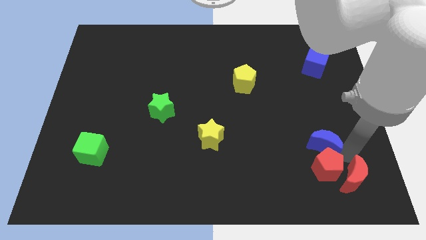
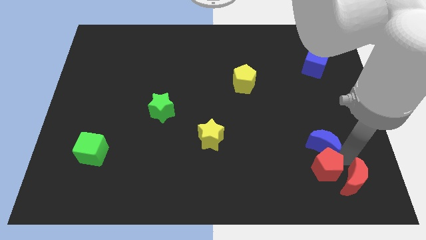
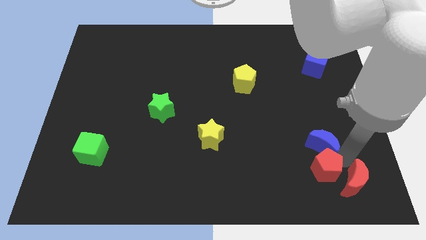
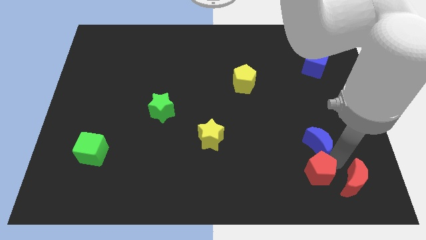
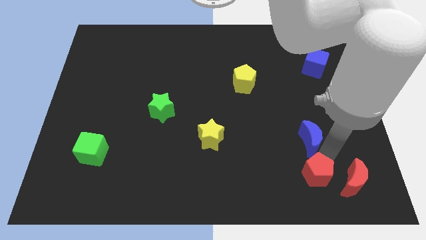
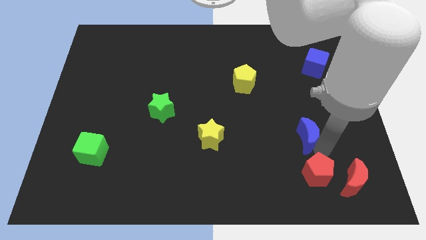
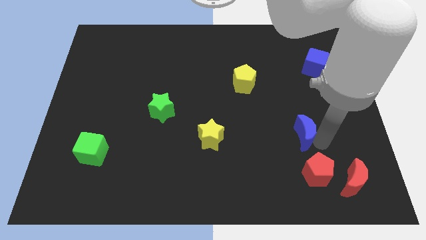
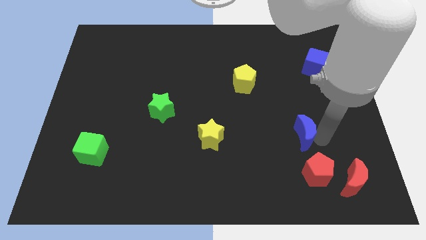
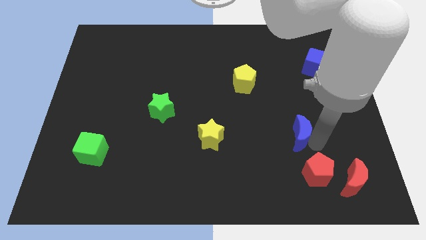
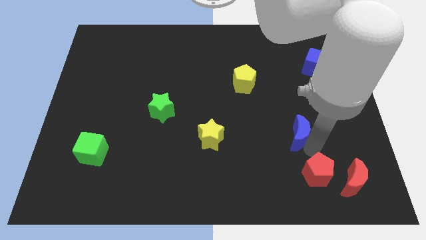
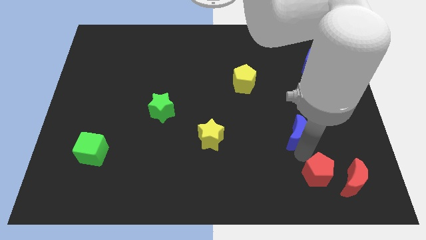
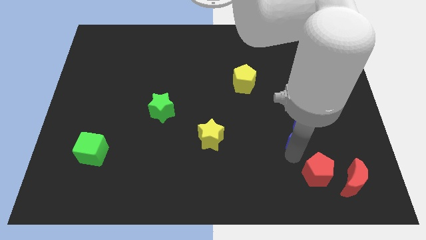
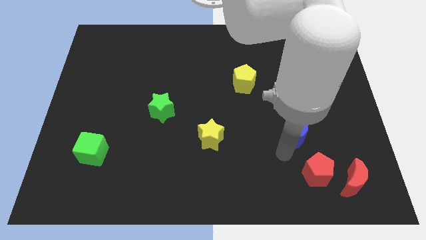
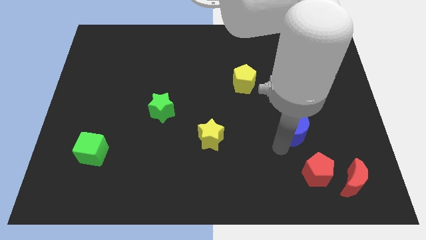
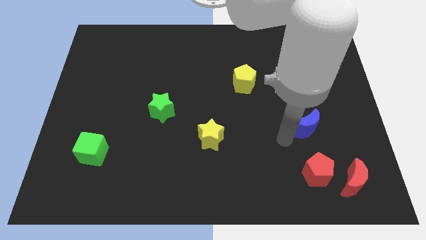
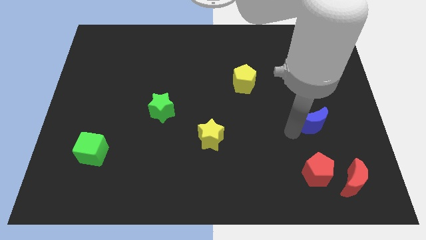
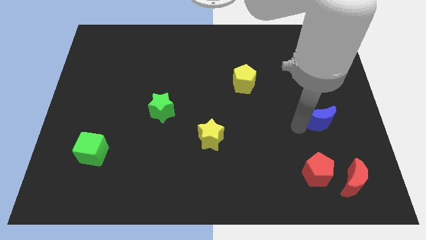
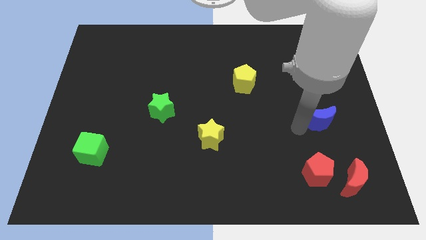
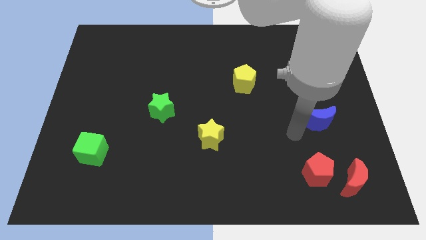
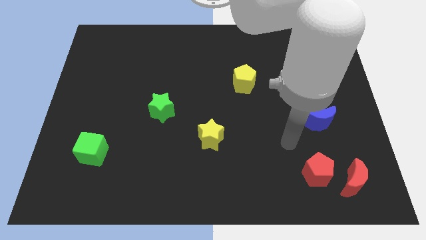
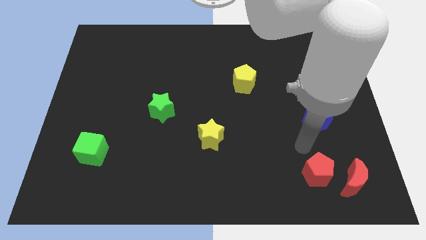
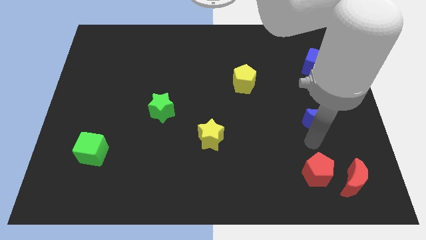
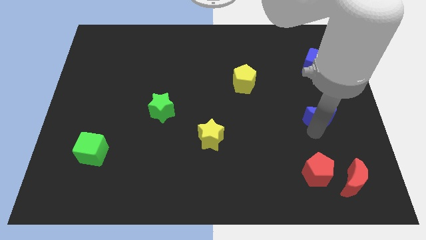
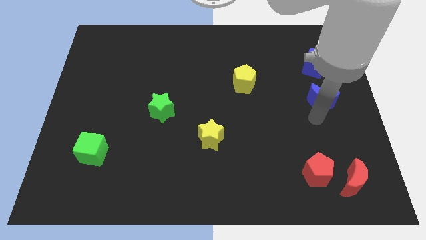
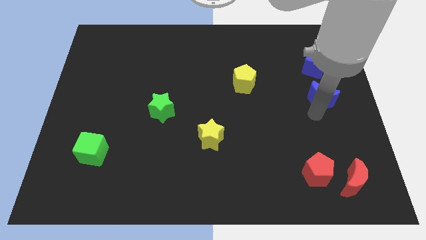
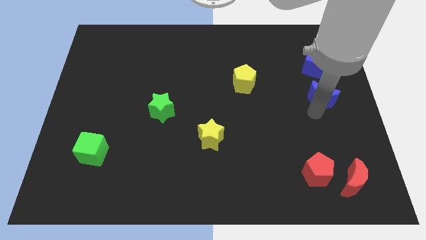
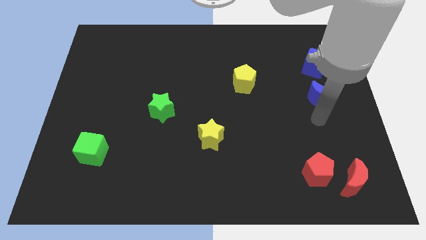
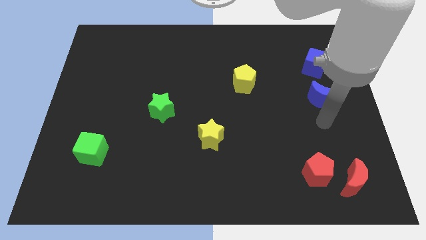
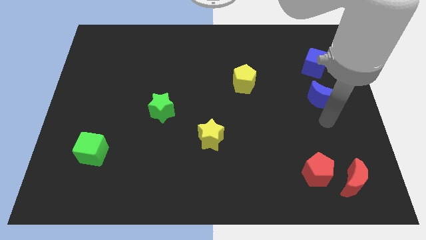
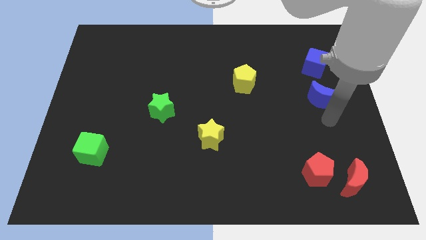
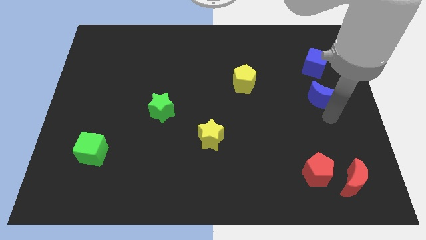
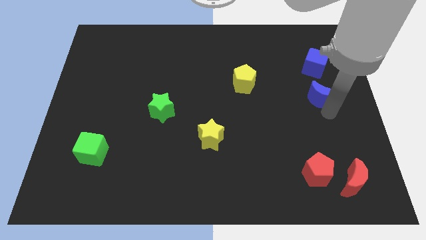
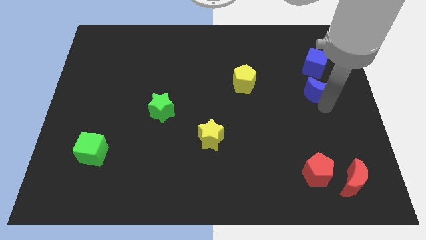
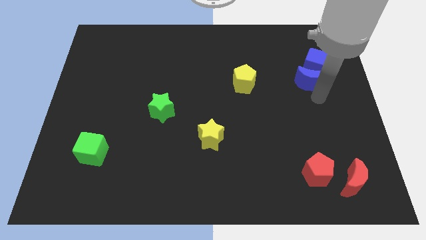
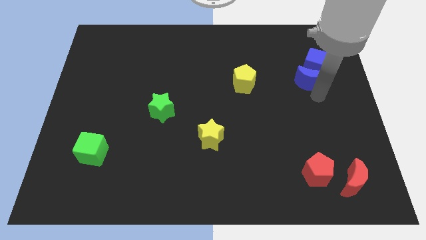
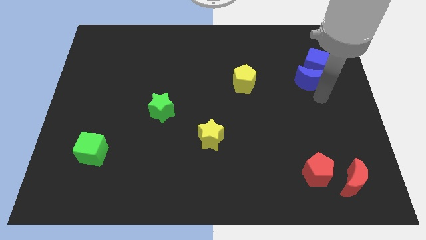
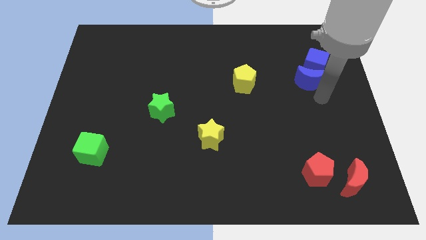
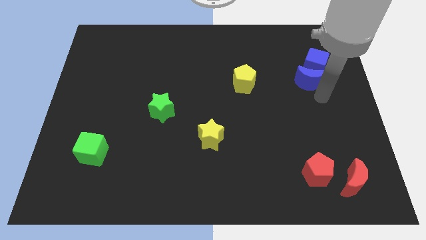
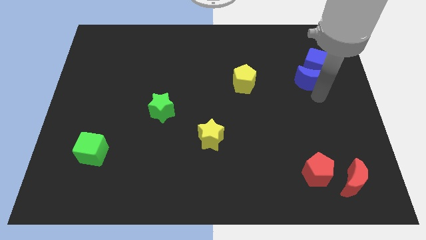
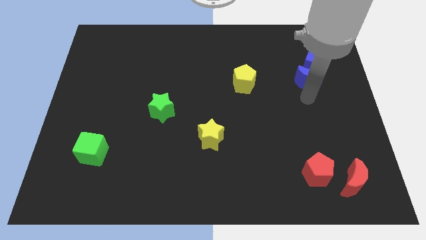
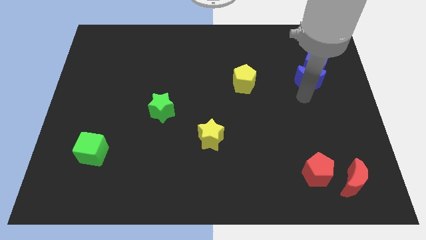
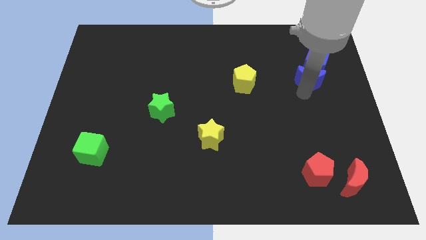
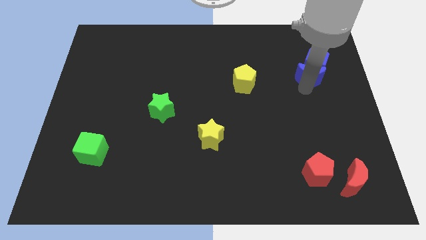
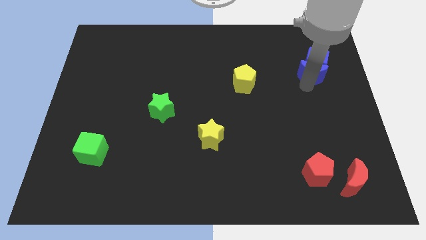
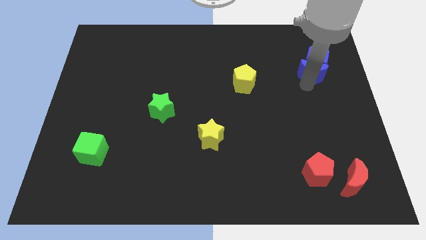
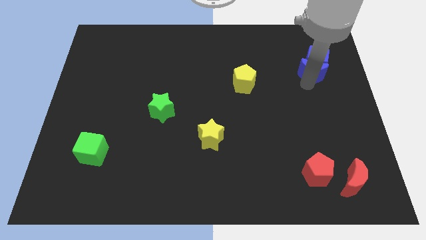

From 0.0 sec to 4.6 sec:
push the blue crescent into the blue cube

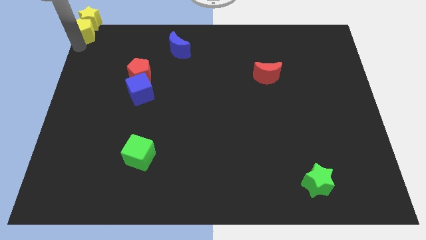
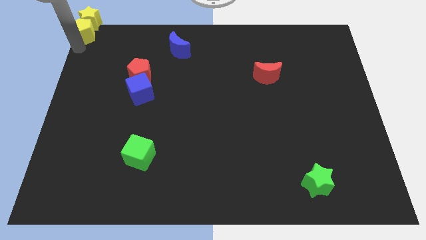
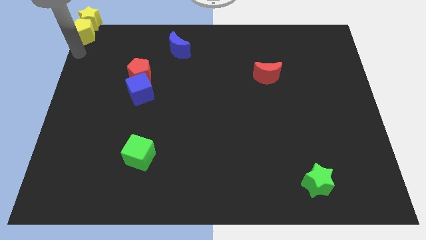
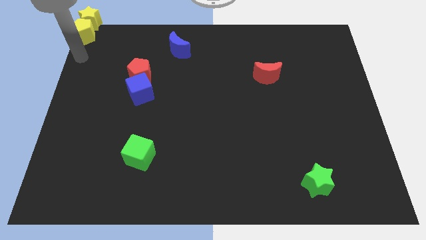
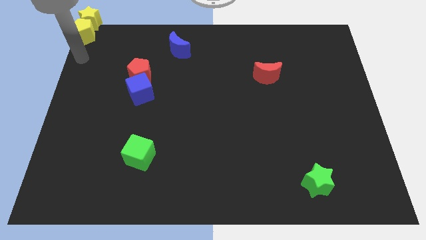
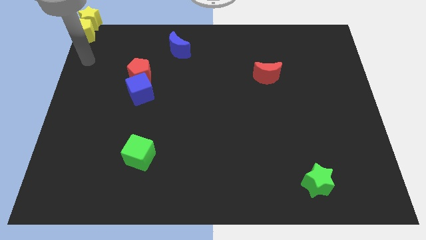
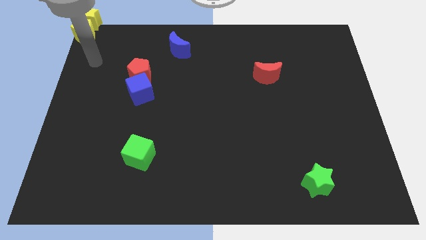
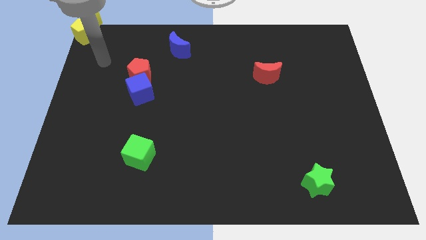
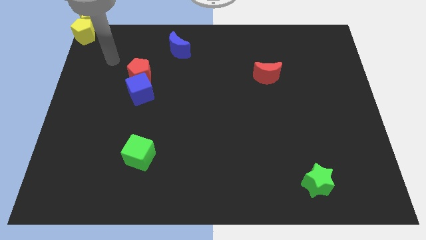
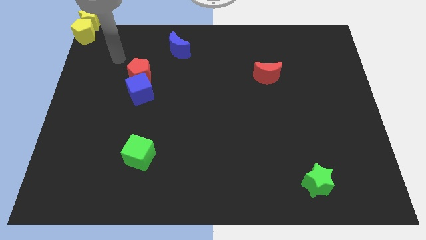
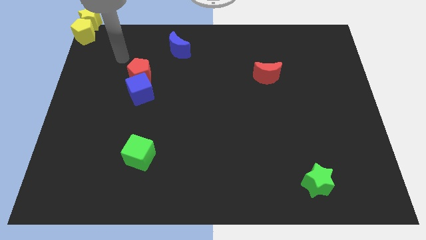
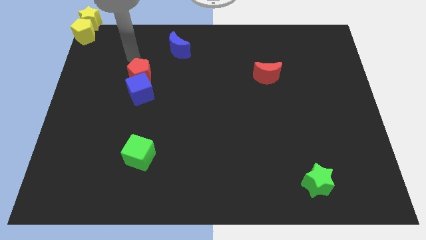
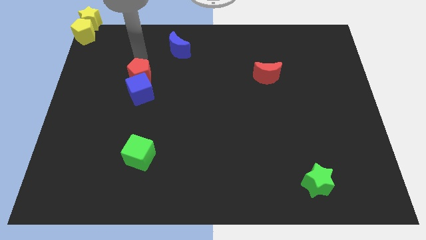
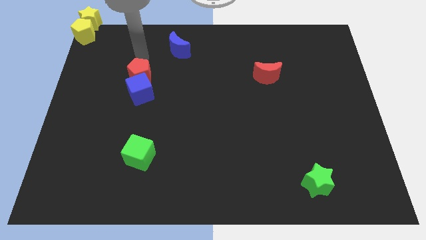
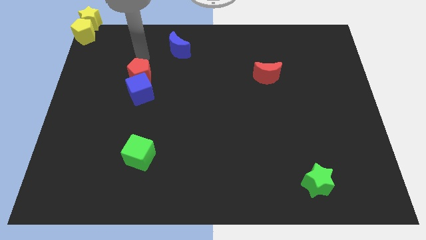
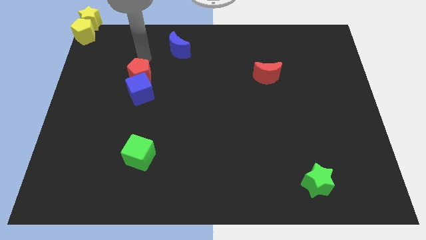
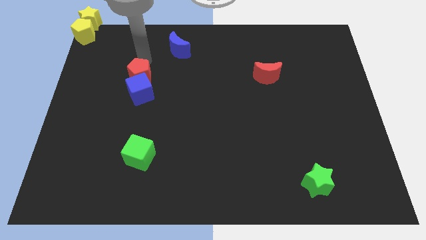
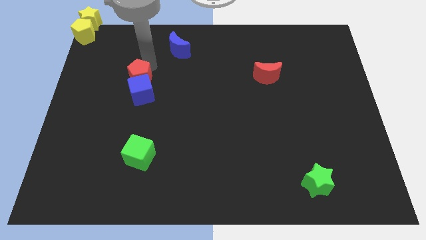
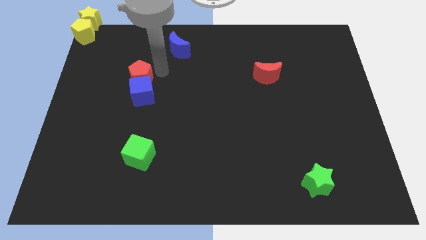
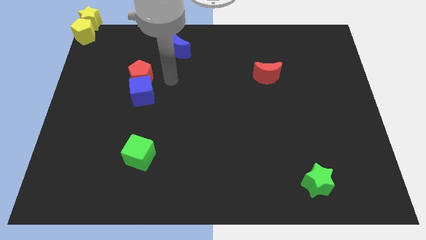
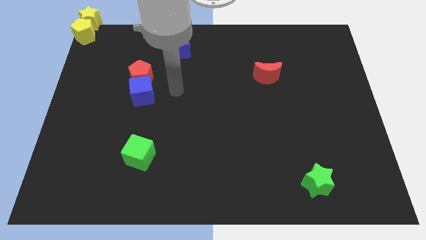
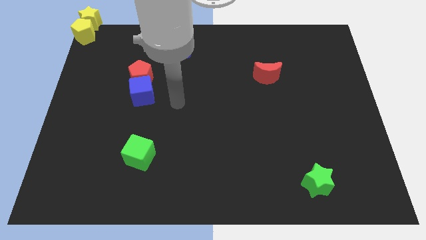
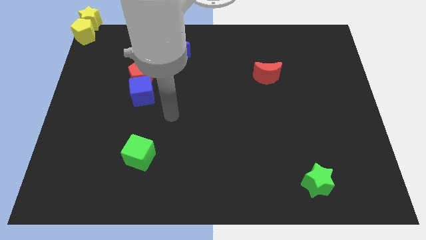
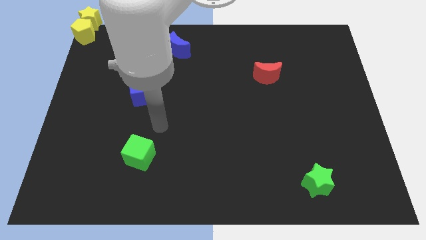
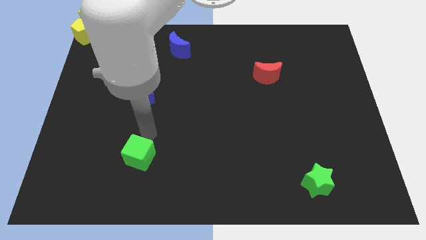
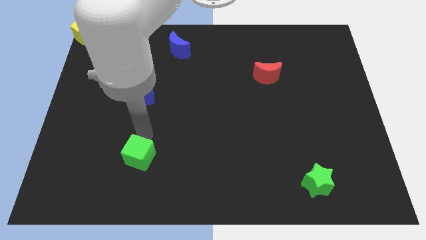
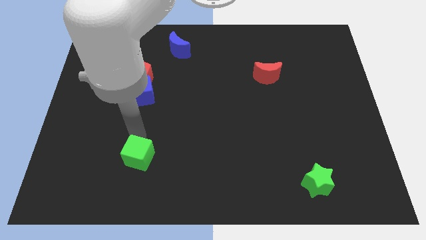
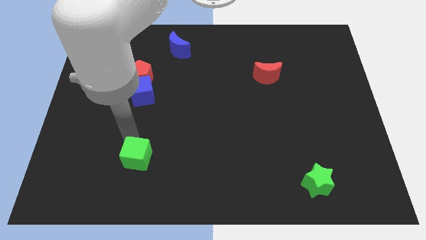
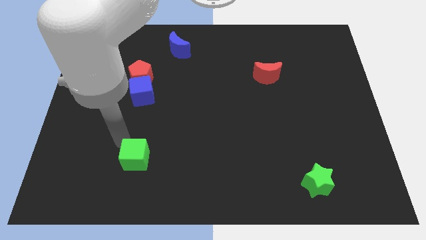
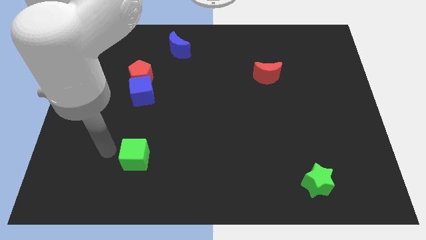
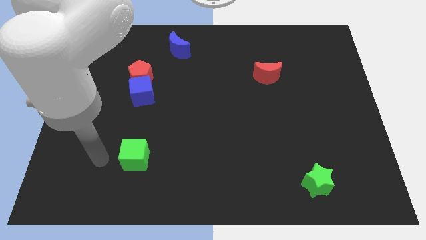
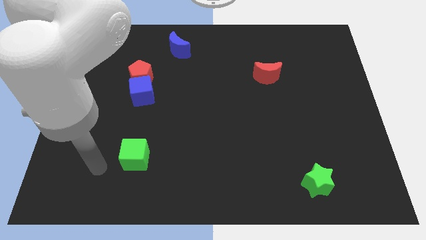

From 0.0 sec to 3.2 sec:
move the arm to the left of the green cube

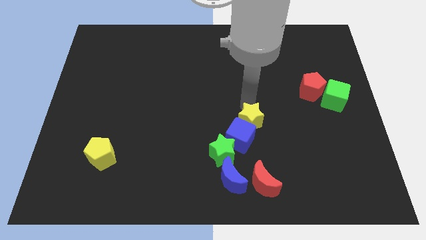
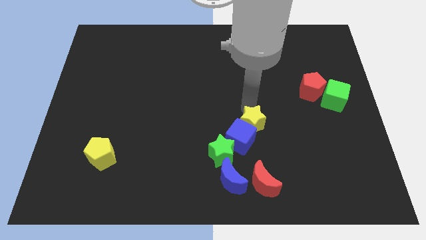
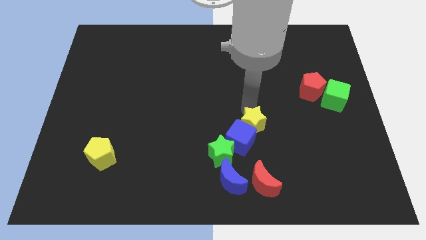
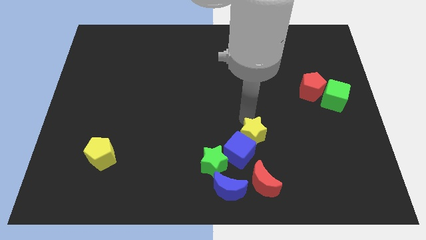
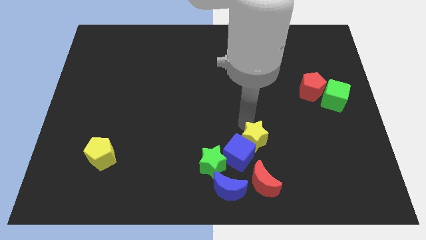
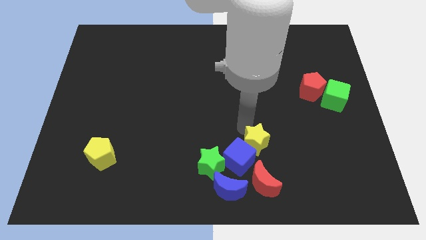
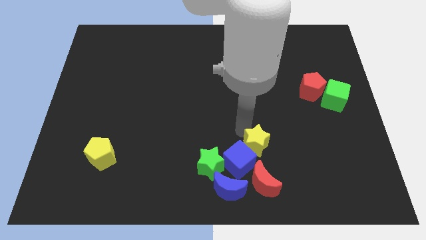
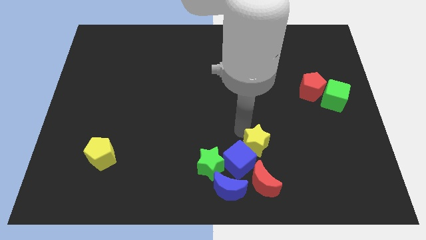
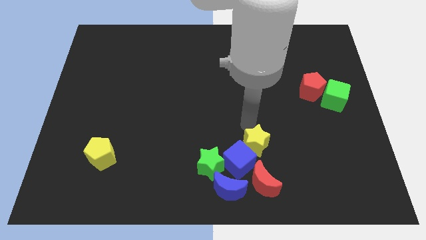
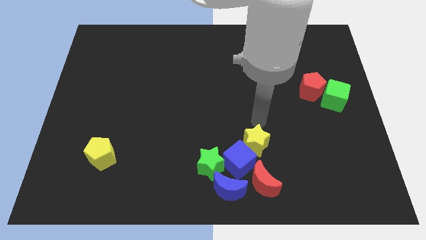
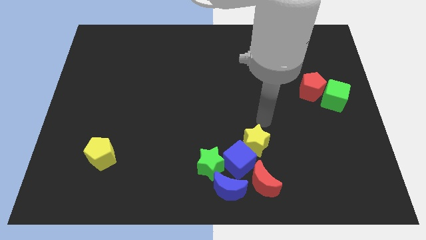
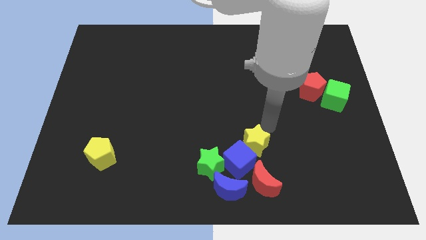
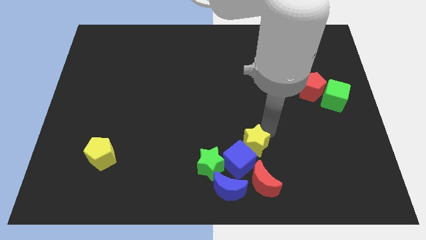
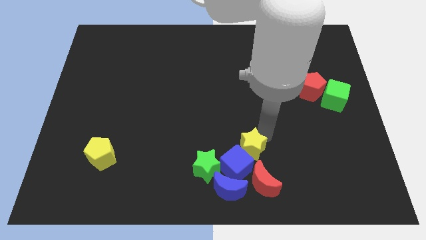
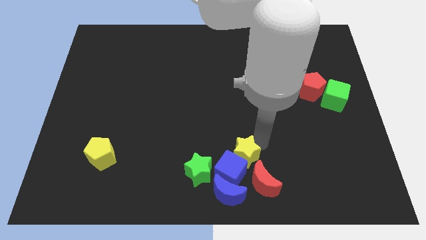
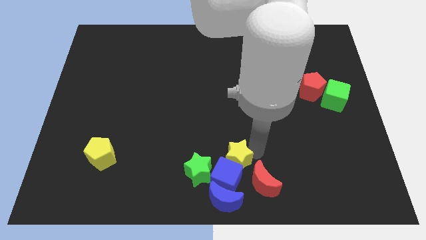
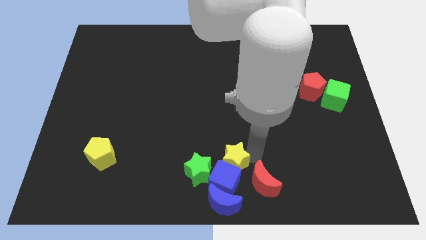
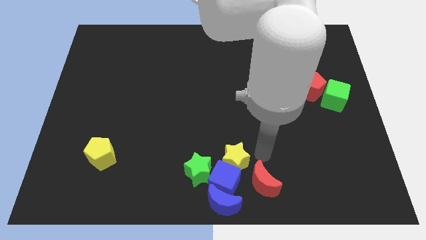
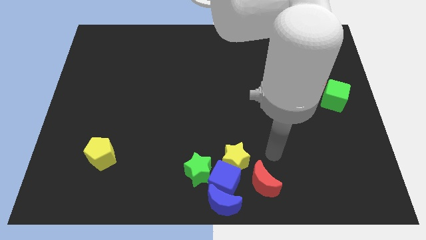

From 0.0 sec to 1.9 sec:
push the yellow star with blue cube into blue moon
